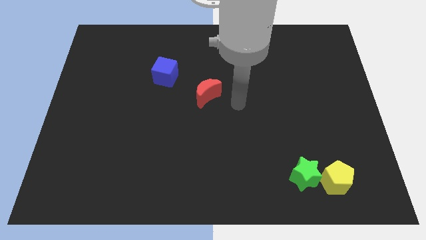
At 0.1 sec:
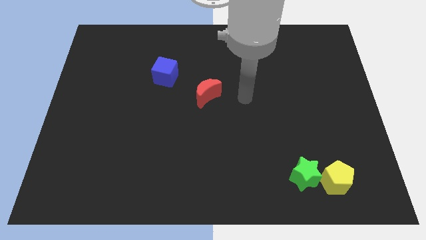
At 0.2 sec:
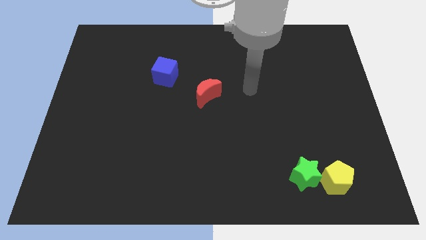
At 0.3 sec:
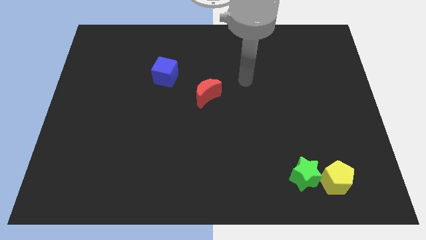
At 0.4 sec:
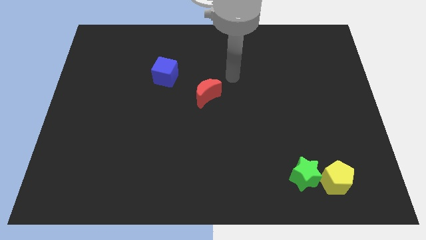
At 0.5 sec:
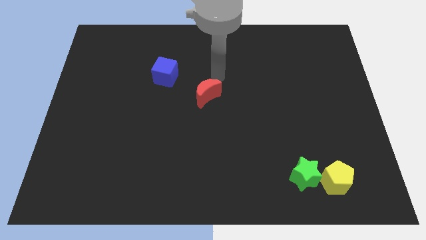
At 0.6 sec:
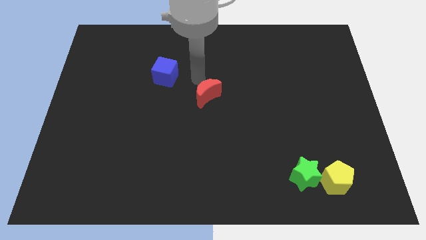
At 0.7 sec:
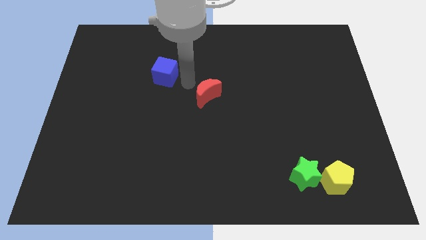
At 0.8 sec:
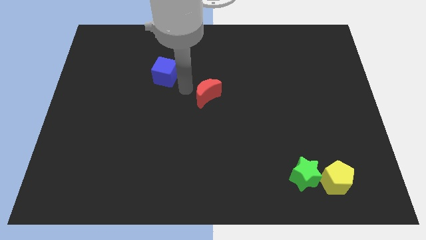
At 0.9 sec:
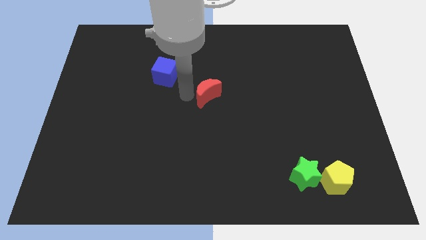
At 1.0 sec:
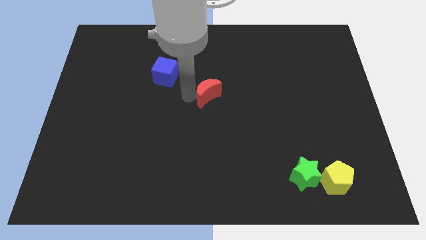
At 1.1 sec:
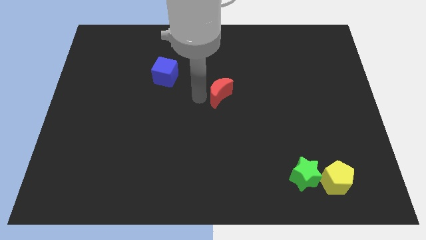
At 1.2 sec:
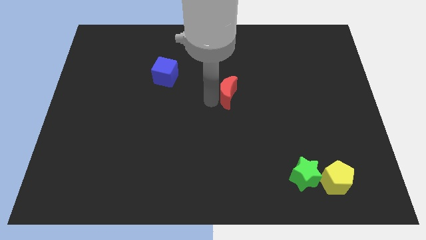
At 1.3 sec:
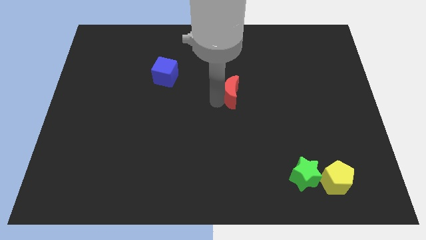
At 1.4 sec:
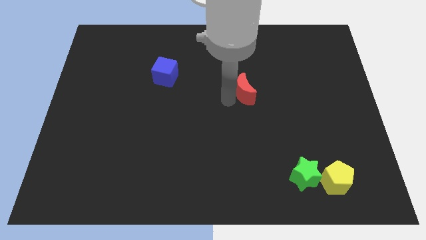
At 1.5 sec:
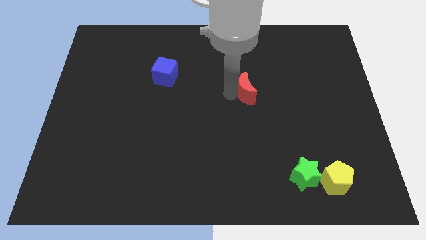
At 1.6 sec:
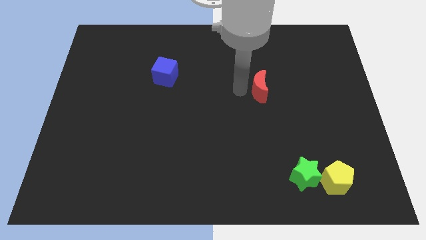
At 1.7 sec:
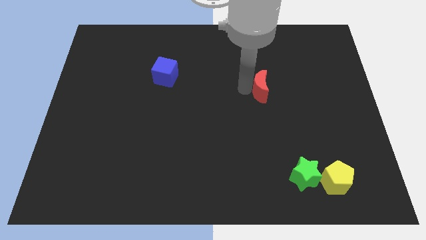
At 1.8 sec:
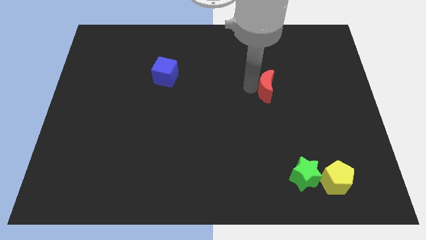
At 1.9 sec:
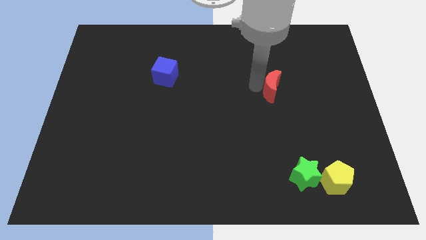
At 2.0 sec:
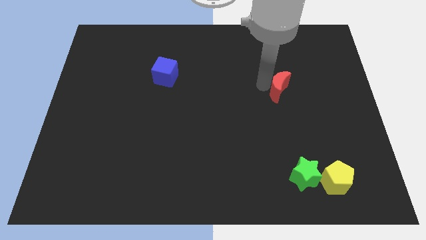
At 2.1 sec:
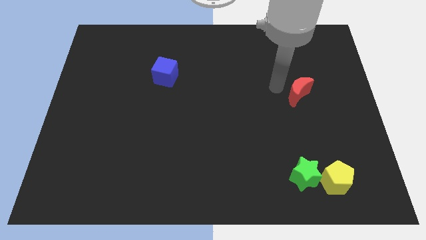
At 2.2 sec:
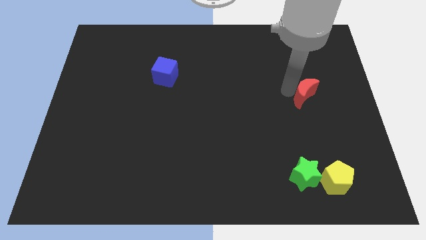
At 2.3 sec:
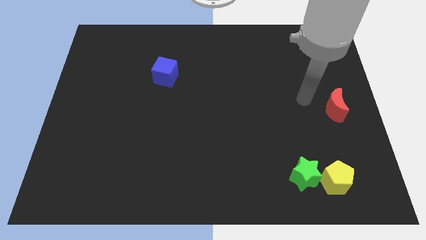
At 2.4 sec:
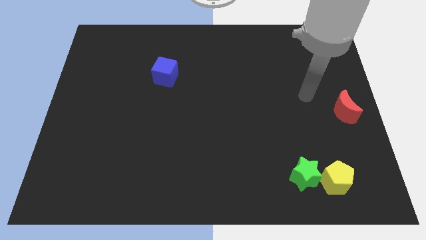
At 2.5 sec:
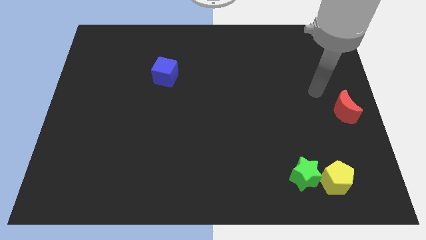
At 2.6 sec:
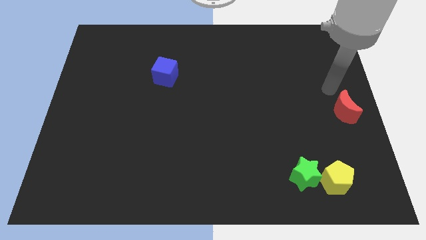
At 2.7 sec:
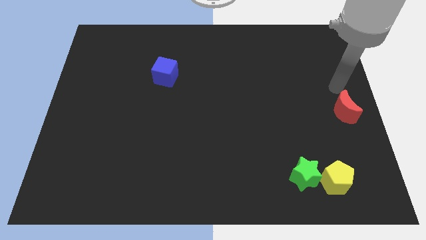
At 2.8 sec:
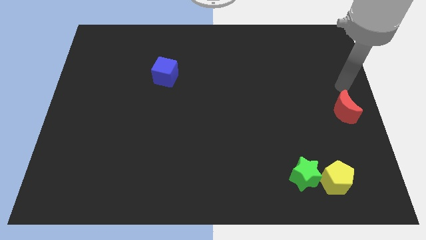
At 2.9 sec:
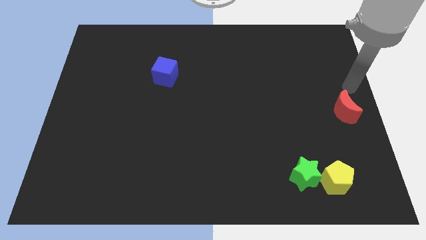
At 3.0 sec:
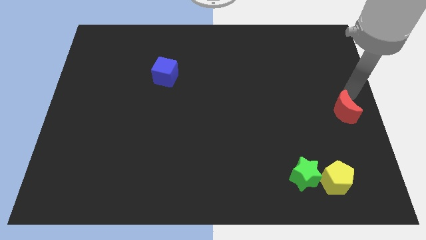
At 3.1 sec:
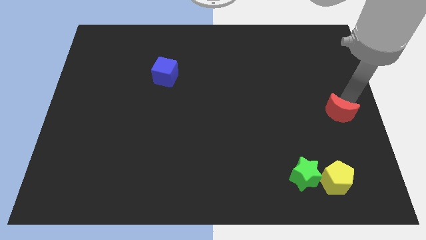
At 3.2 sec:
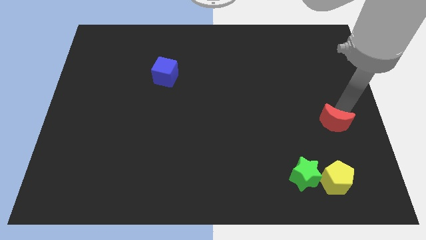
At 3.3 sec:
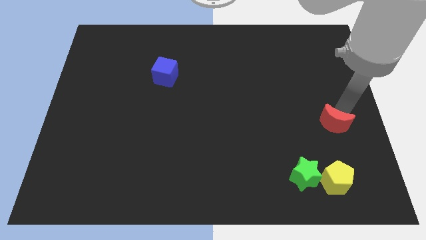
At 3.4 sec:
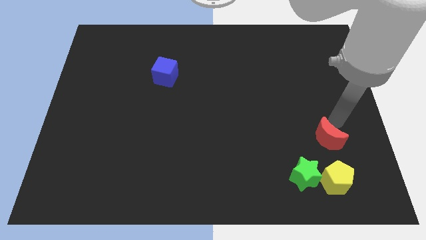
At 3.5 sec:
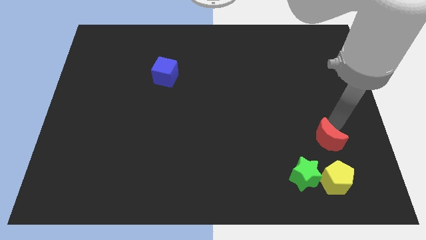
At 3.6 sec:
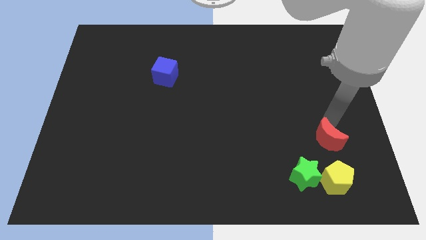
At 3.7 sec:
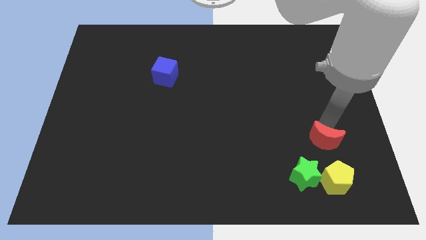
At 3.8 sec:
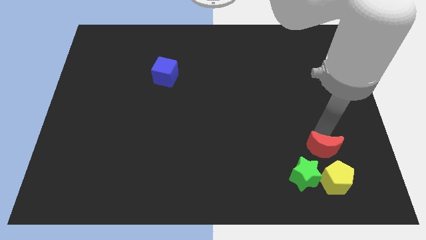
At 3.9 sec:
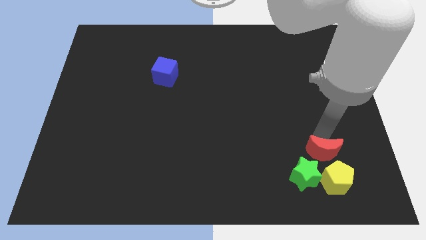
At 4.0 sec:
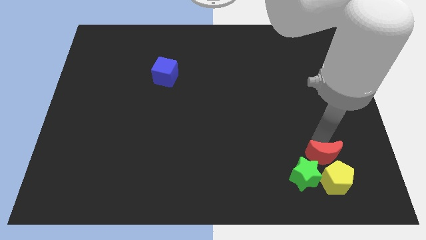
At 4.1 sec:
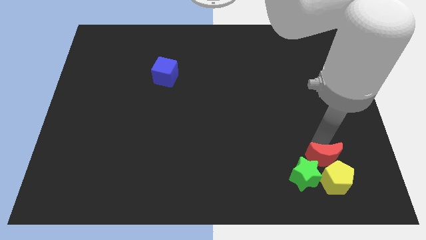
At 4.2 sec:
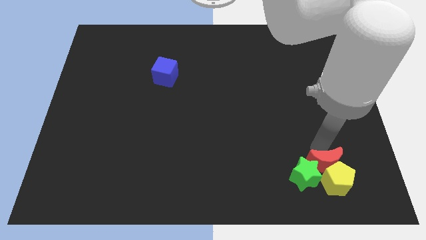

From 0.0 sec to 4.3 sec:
push the red moon to the yellow block

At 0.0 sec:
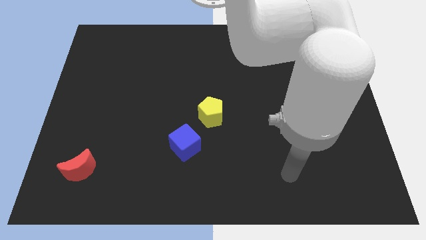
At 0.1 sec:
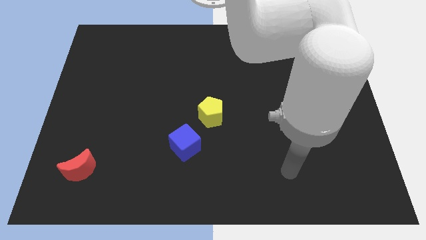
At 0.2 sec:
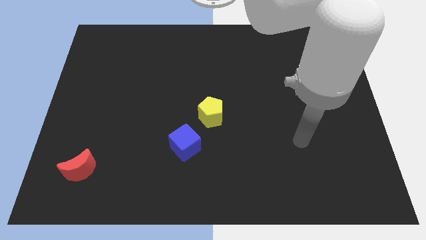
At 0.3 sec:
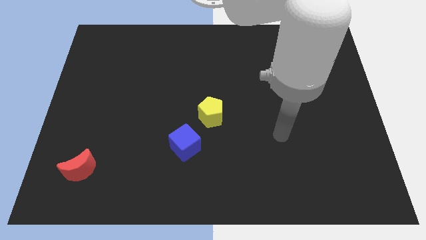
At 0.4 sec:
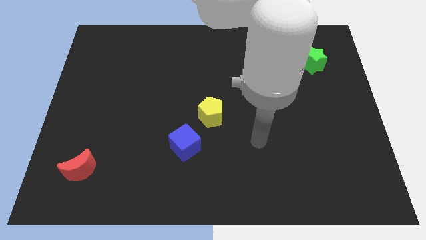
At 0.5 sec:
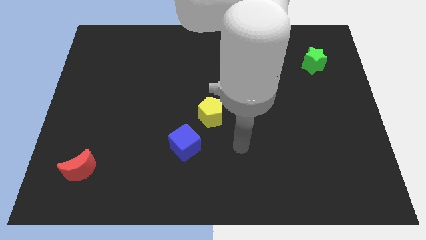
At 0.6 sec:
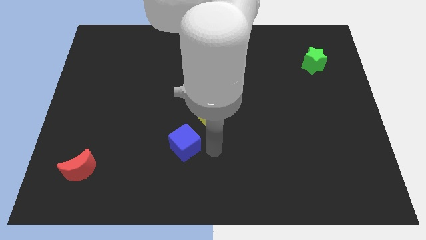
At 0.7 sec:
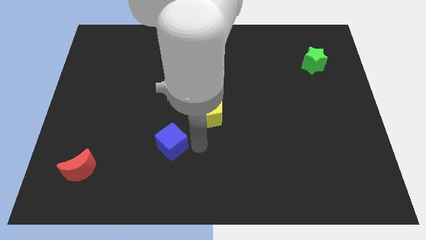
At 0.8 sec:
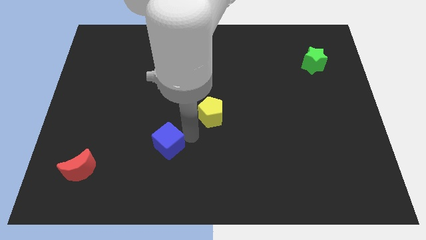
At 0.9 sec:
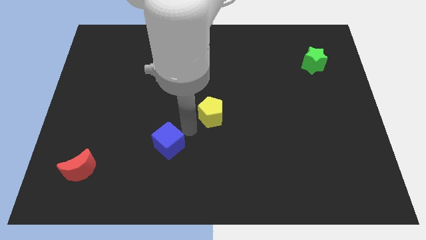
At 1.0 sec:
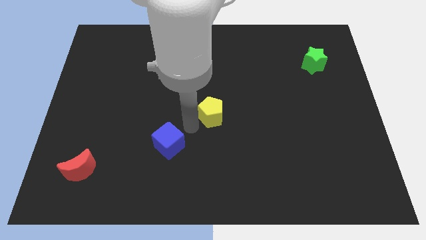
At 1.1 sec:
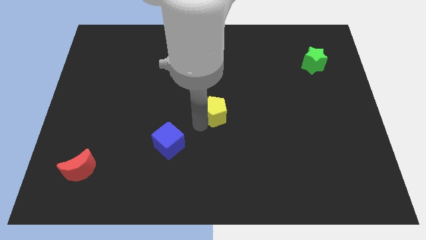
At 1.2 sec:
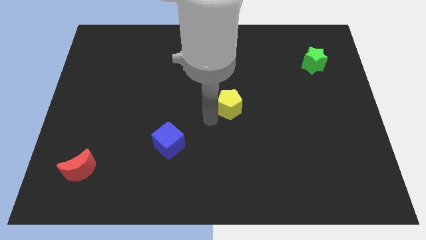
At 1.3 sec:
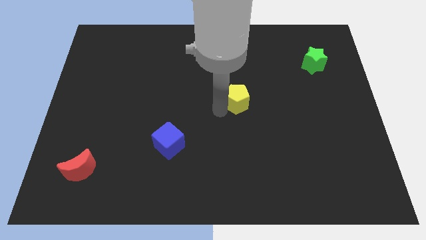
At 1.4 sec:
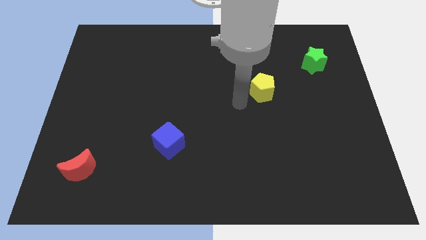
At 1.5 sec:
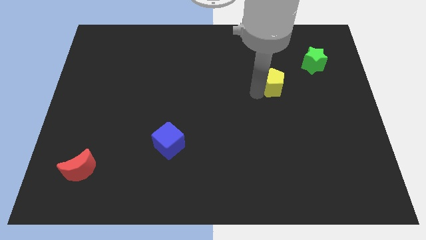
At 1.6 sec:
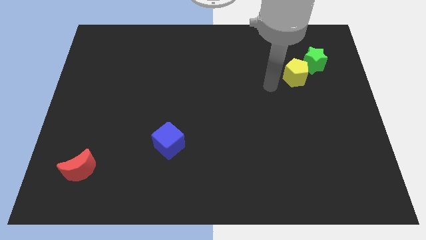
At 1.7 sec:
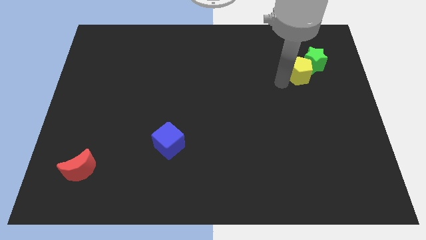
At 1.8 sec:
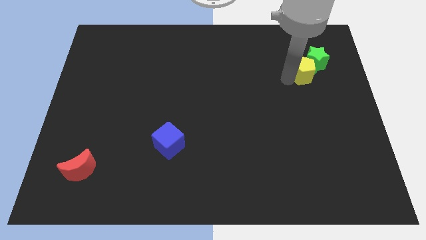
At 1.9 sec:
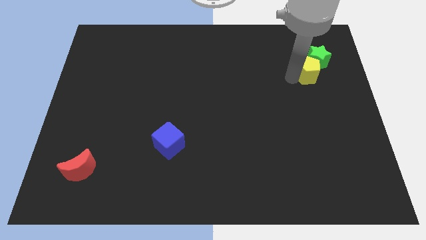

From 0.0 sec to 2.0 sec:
push the pentagon close to the green star

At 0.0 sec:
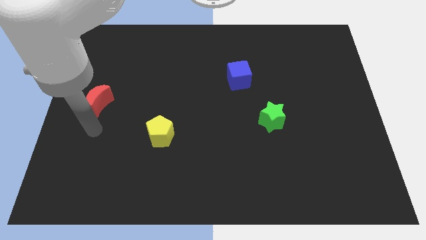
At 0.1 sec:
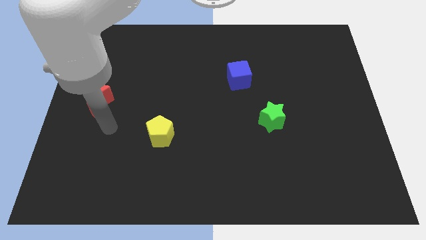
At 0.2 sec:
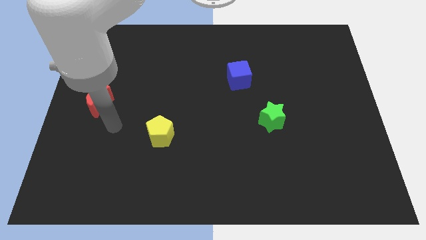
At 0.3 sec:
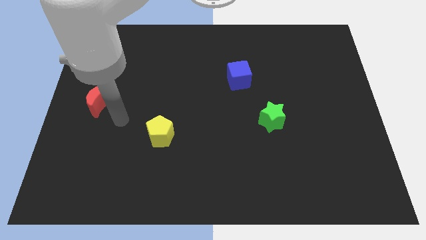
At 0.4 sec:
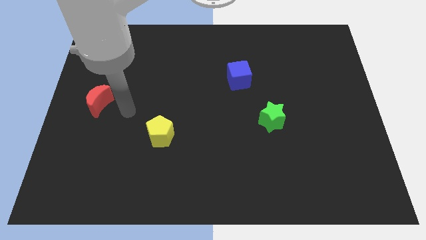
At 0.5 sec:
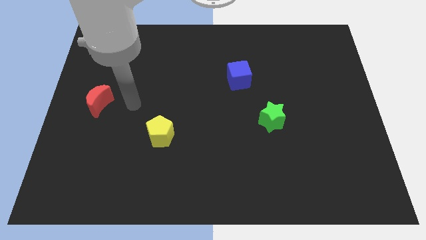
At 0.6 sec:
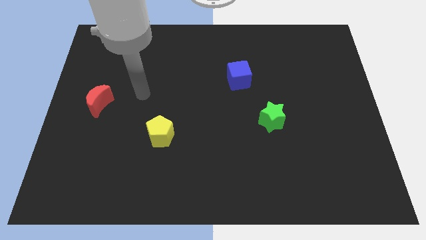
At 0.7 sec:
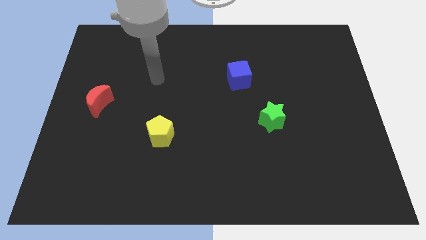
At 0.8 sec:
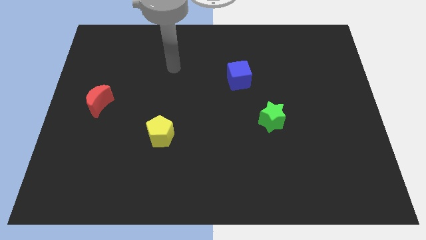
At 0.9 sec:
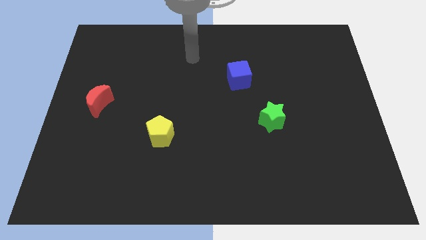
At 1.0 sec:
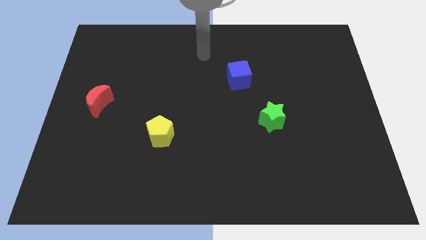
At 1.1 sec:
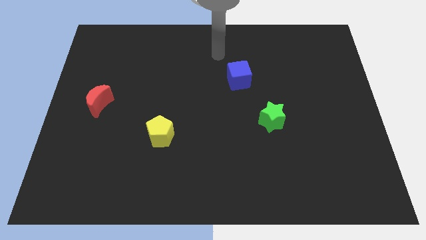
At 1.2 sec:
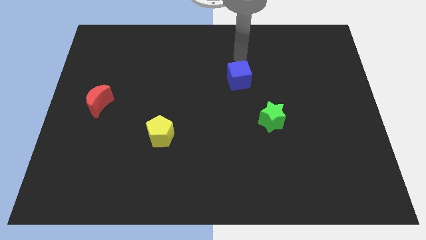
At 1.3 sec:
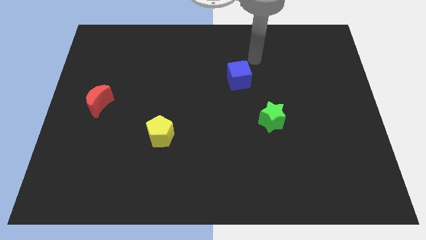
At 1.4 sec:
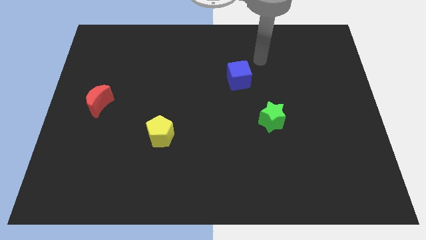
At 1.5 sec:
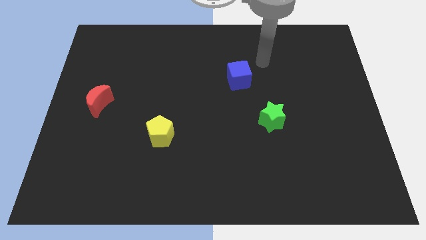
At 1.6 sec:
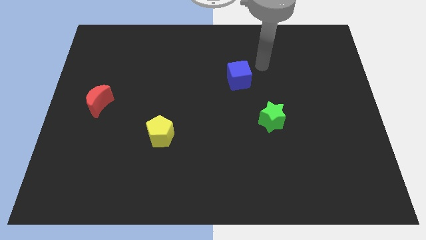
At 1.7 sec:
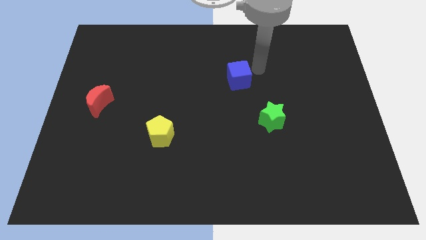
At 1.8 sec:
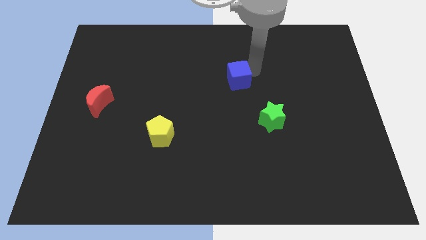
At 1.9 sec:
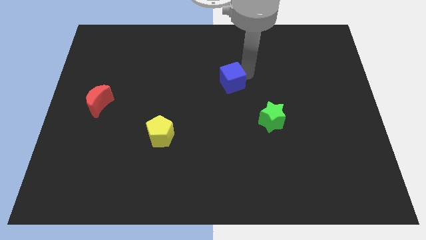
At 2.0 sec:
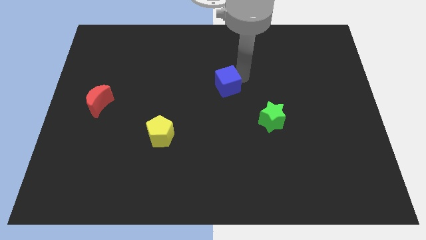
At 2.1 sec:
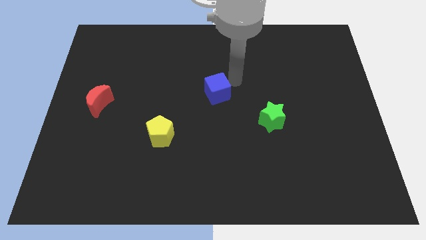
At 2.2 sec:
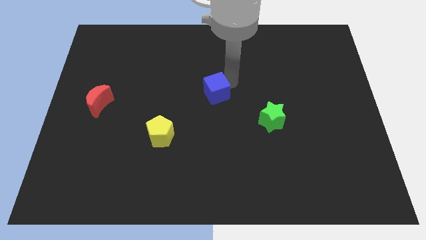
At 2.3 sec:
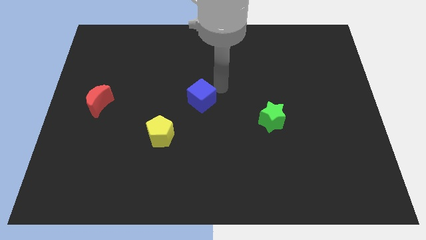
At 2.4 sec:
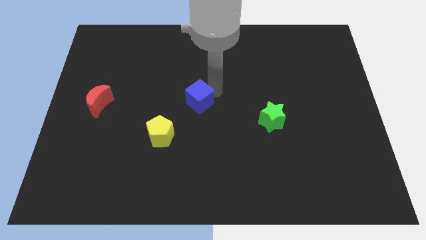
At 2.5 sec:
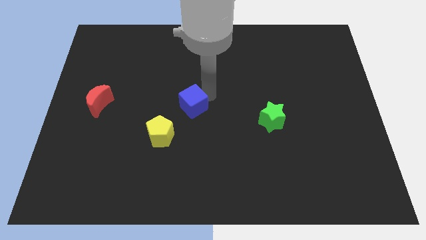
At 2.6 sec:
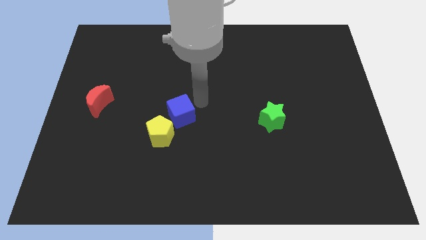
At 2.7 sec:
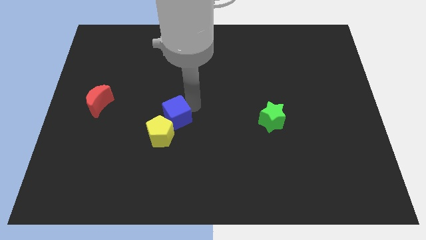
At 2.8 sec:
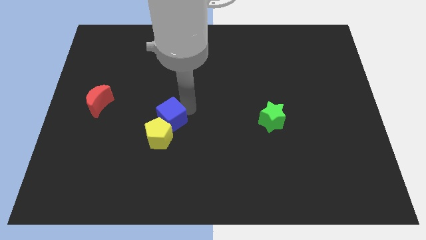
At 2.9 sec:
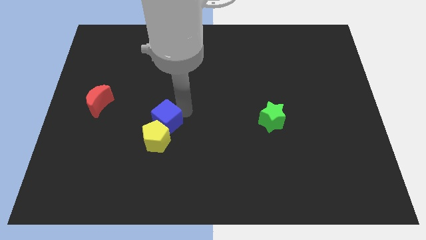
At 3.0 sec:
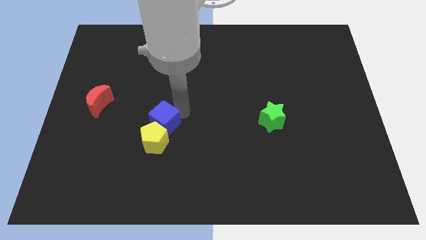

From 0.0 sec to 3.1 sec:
slide the blue cube close to the yellow block
